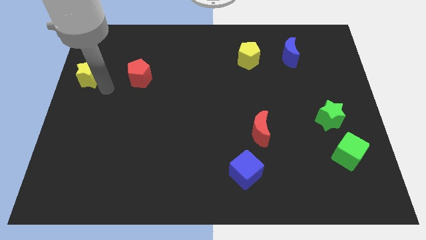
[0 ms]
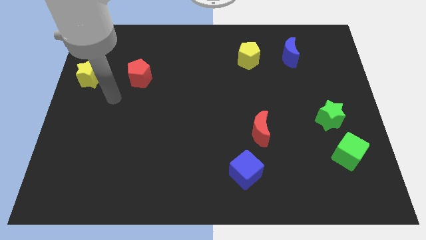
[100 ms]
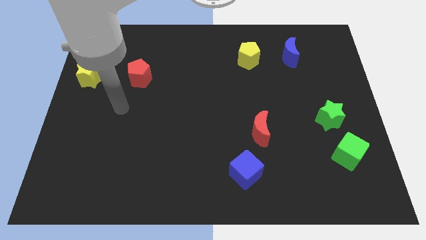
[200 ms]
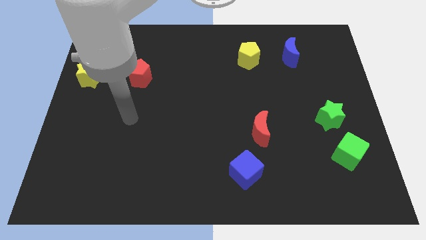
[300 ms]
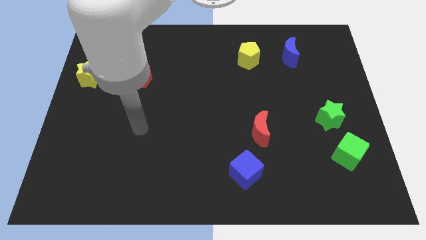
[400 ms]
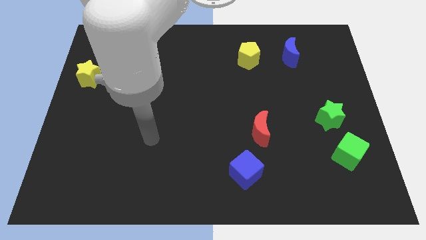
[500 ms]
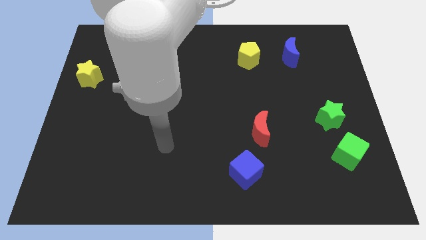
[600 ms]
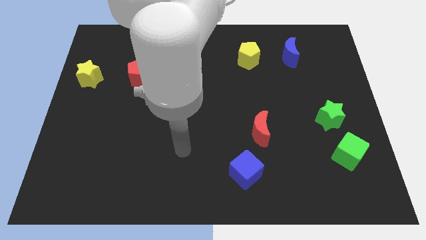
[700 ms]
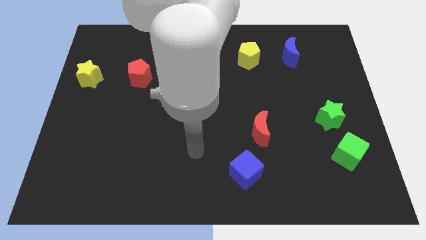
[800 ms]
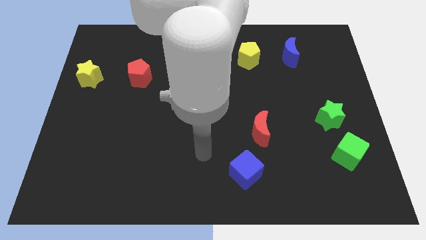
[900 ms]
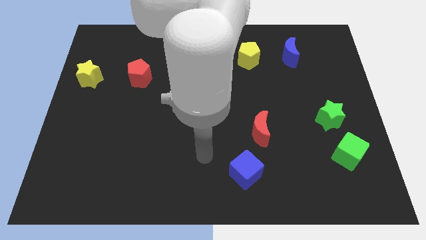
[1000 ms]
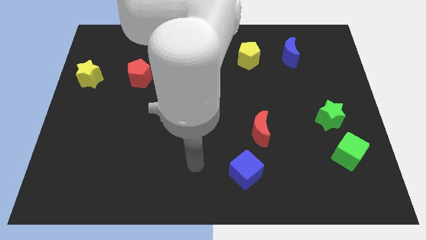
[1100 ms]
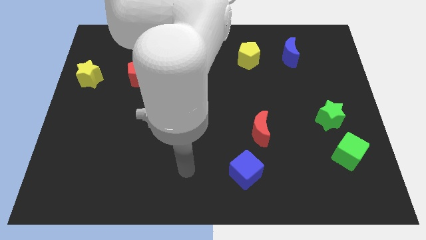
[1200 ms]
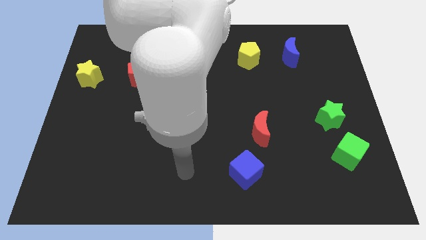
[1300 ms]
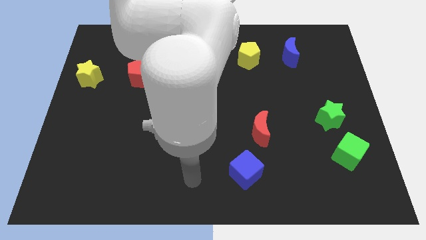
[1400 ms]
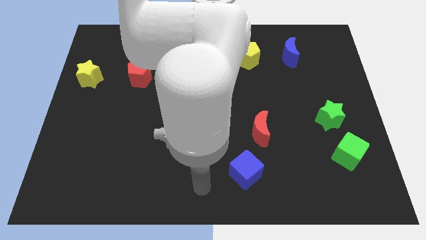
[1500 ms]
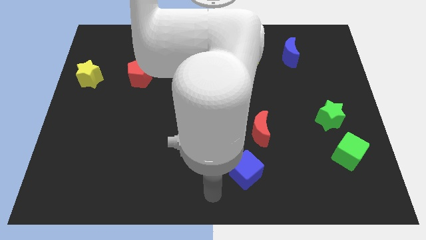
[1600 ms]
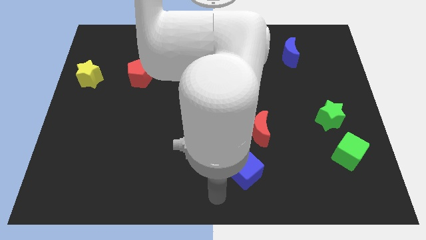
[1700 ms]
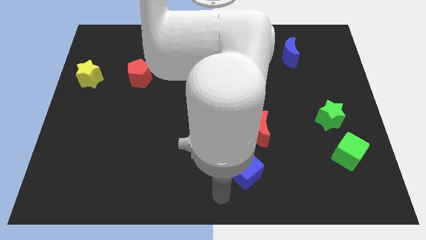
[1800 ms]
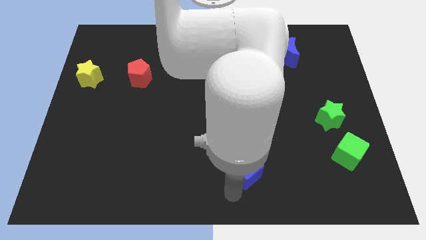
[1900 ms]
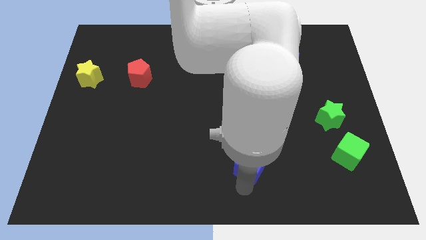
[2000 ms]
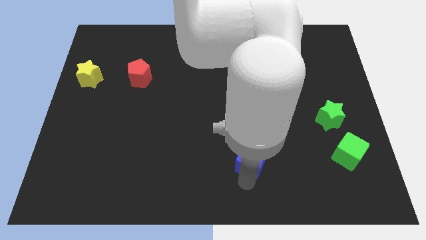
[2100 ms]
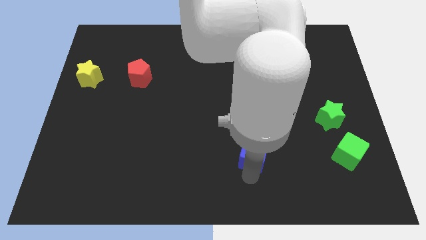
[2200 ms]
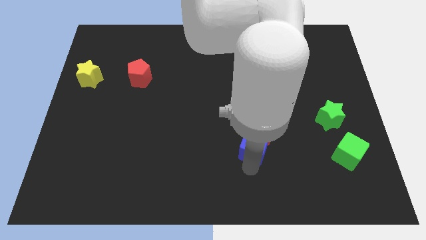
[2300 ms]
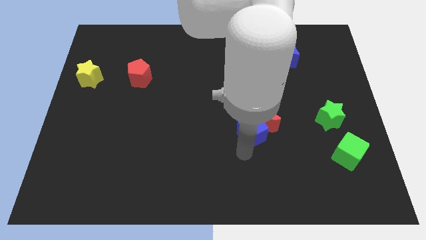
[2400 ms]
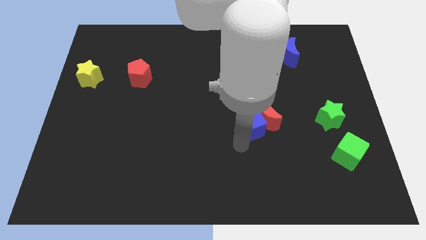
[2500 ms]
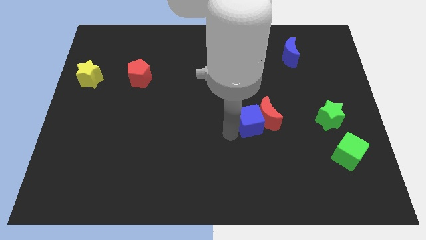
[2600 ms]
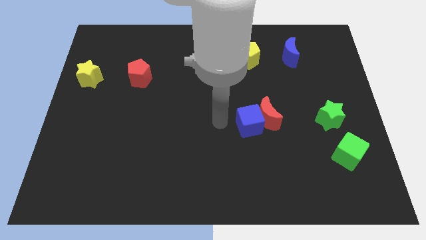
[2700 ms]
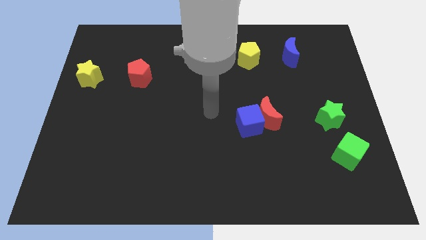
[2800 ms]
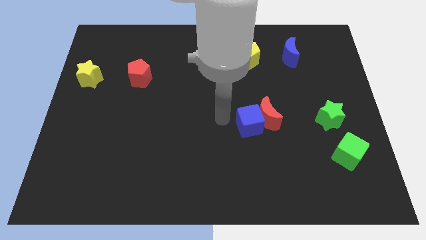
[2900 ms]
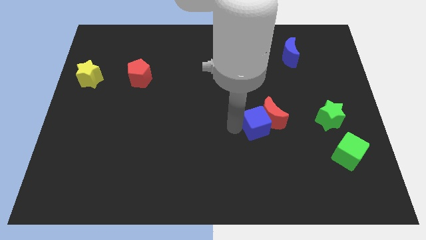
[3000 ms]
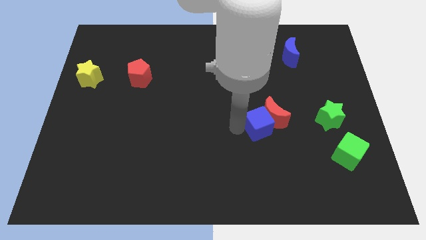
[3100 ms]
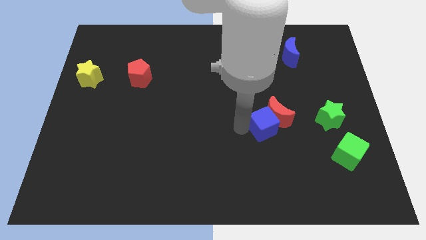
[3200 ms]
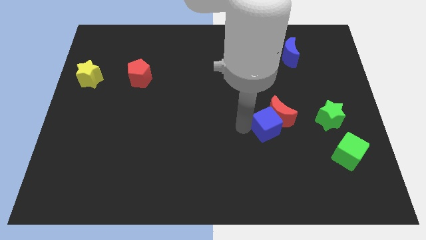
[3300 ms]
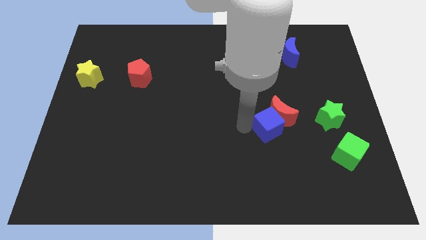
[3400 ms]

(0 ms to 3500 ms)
push blue cube and red crescent towards the right side of the board

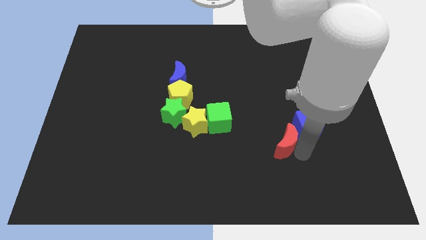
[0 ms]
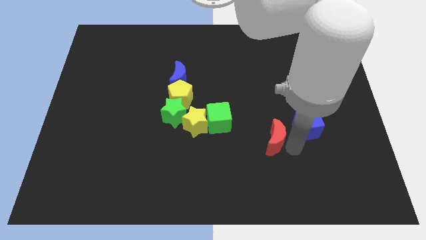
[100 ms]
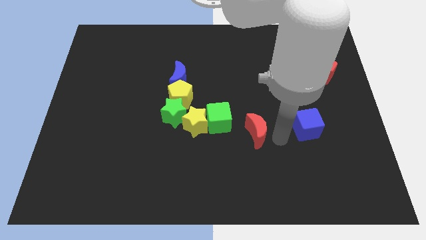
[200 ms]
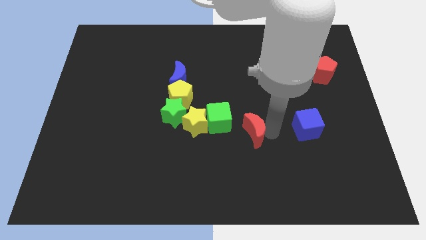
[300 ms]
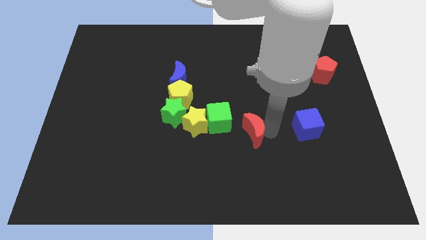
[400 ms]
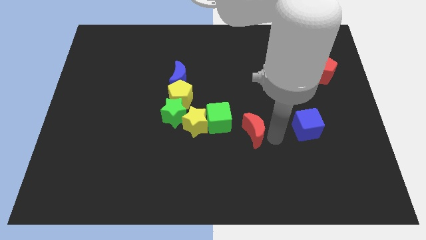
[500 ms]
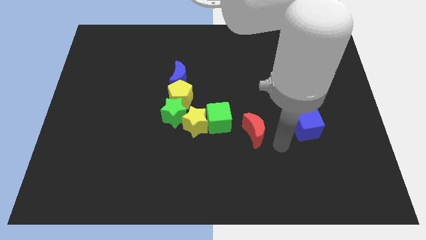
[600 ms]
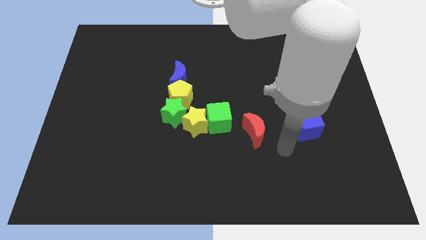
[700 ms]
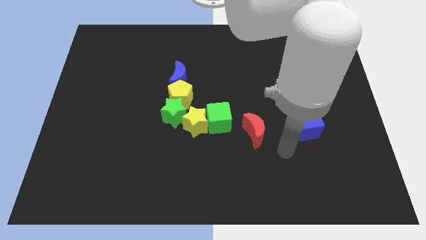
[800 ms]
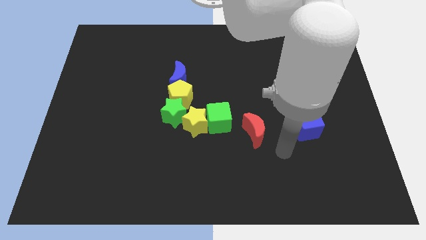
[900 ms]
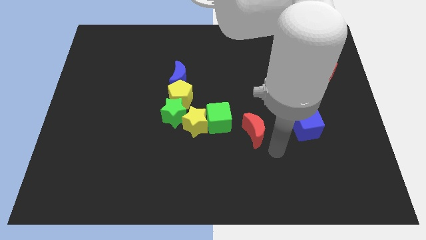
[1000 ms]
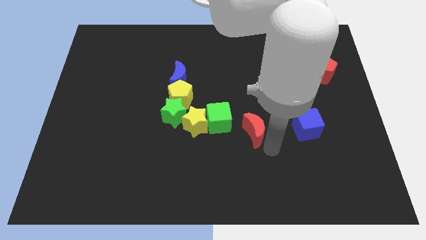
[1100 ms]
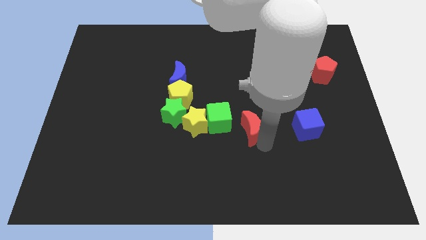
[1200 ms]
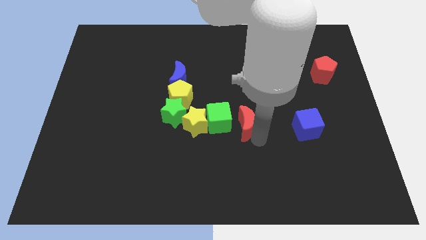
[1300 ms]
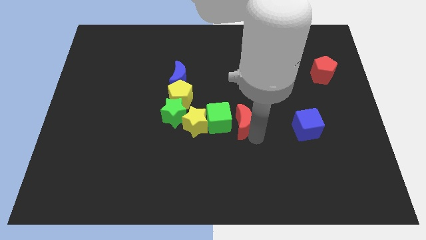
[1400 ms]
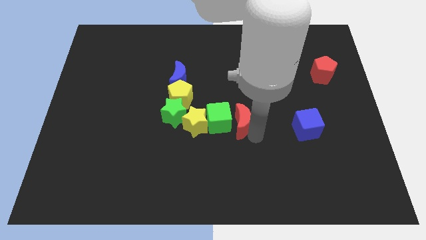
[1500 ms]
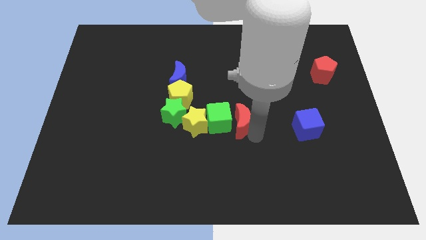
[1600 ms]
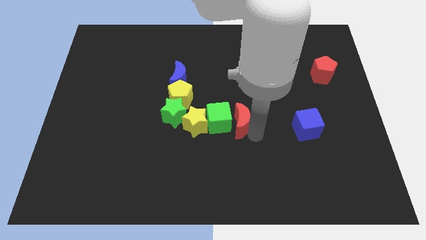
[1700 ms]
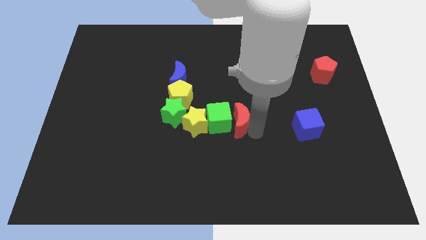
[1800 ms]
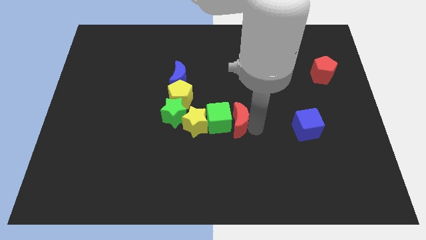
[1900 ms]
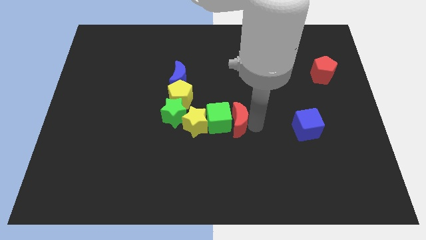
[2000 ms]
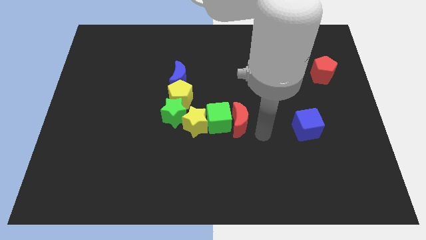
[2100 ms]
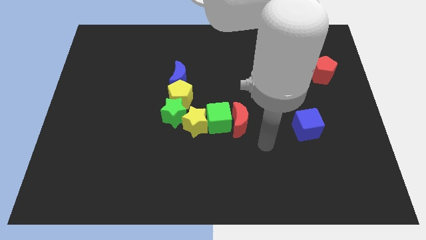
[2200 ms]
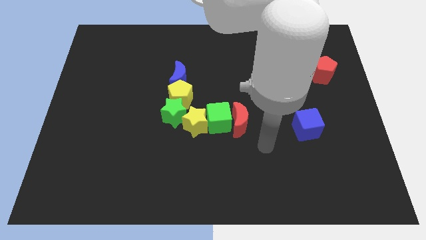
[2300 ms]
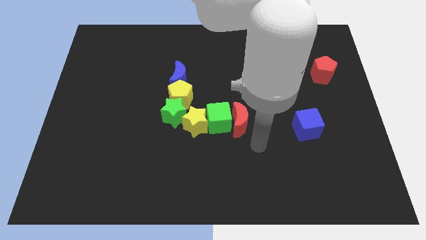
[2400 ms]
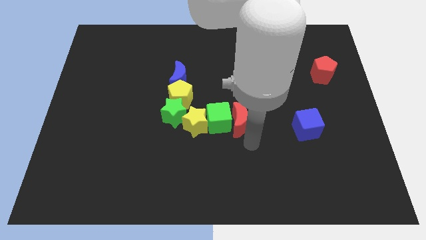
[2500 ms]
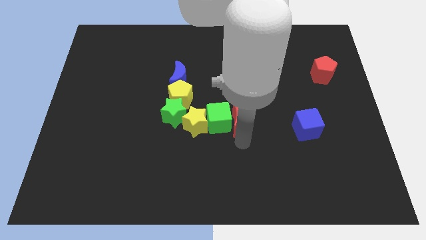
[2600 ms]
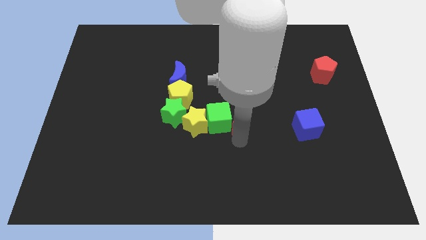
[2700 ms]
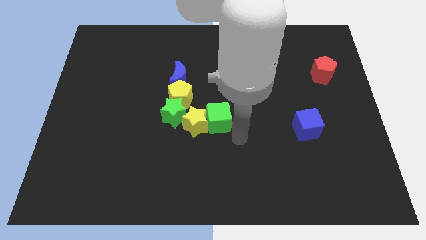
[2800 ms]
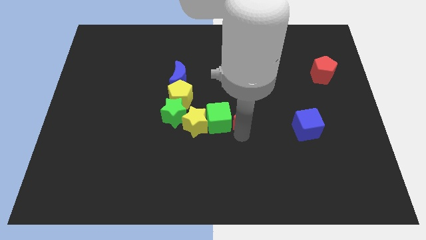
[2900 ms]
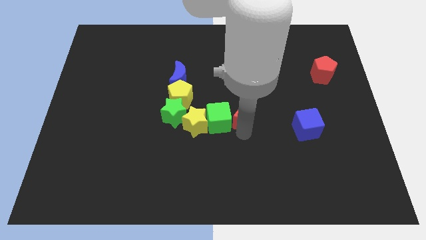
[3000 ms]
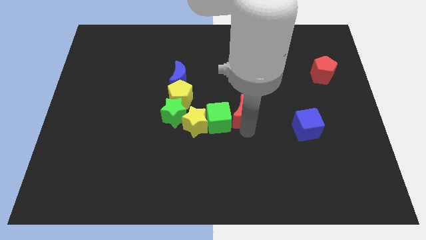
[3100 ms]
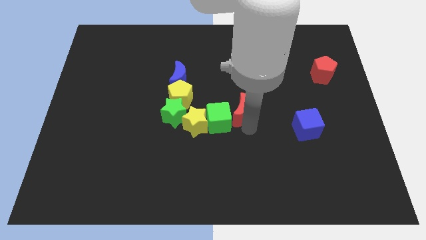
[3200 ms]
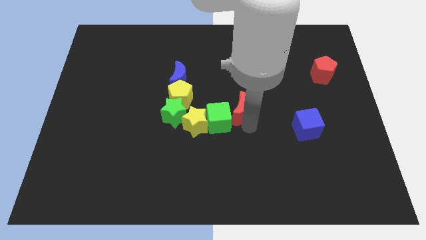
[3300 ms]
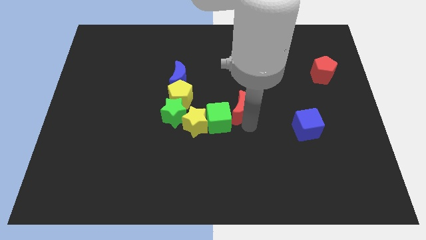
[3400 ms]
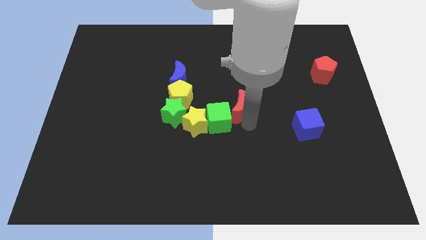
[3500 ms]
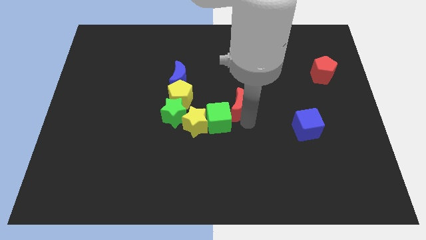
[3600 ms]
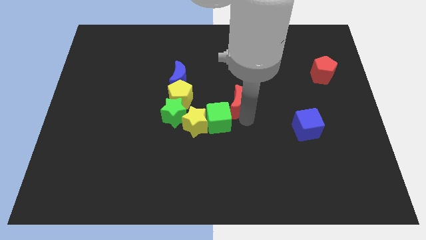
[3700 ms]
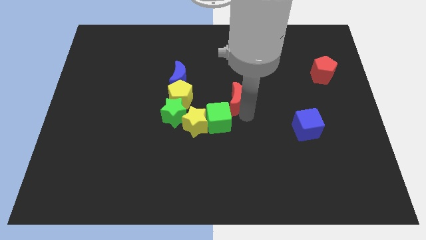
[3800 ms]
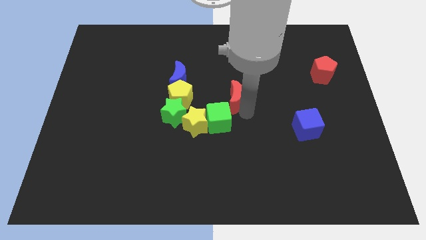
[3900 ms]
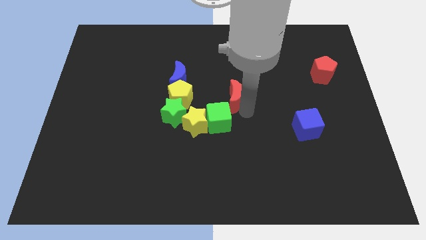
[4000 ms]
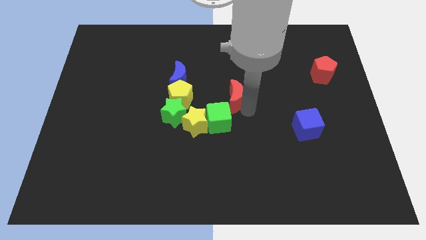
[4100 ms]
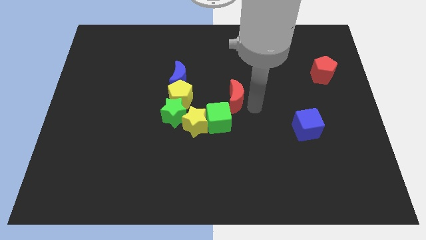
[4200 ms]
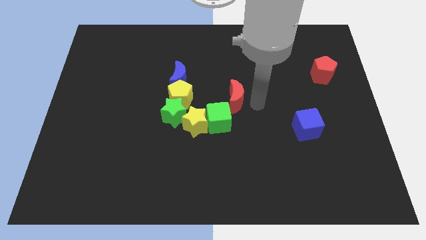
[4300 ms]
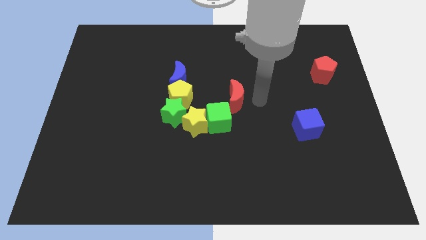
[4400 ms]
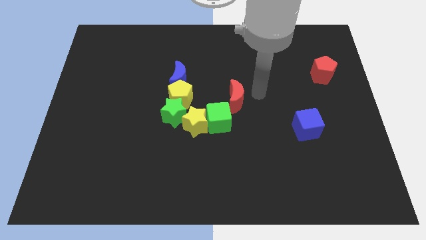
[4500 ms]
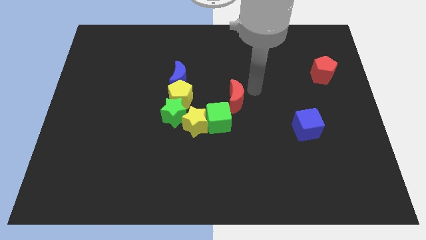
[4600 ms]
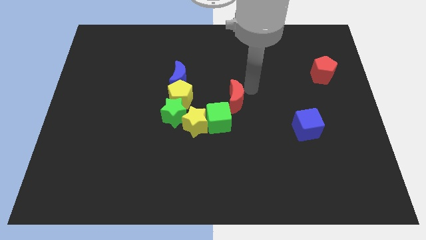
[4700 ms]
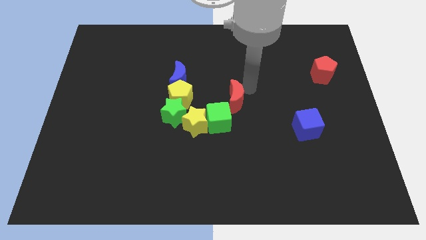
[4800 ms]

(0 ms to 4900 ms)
move the red moon diagonally to the right of the green cube

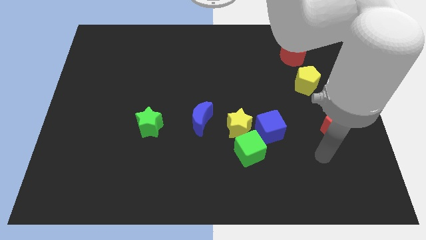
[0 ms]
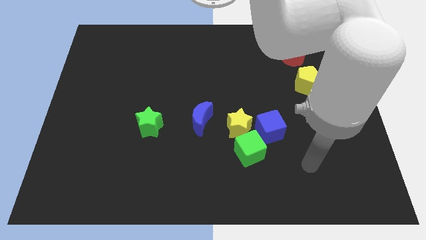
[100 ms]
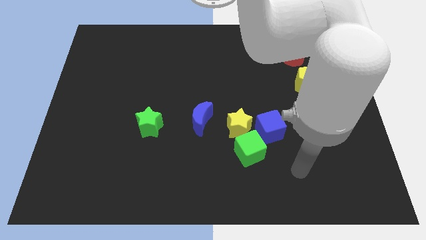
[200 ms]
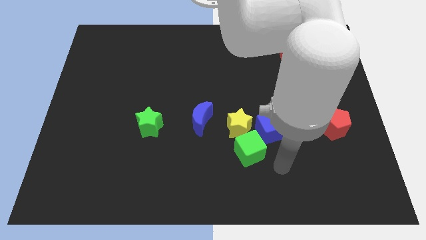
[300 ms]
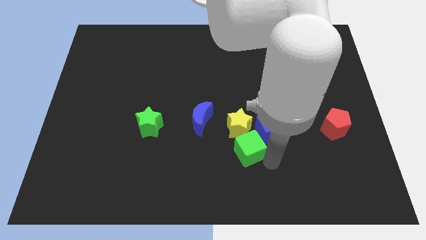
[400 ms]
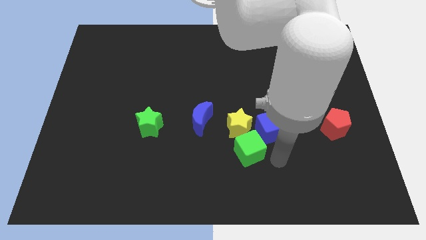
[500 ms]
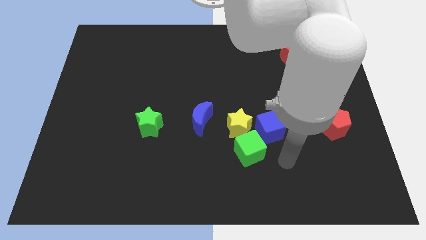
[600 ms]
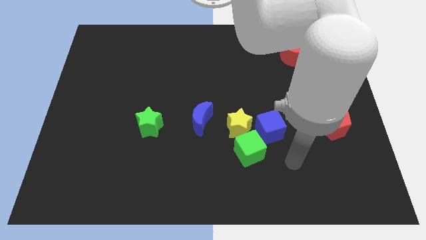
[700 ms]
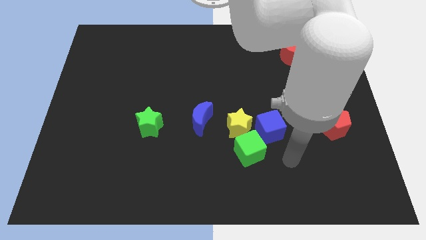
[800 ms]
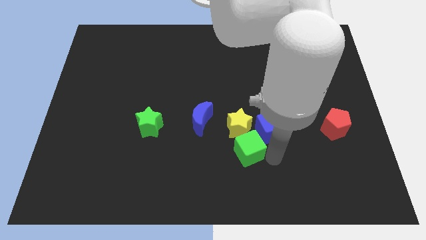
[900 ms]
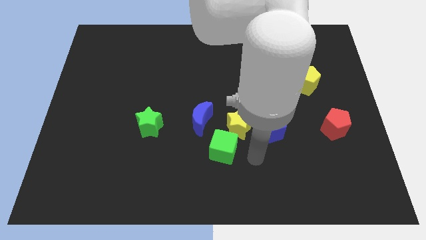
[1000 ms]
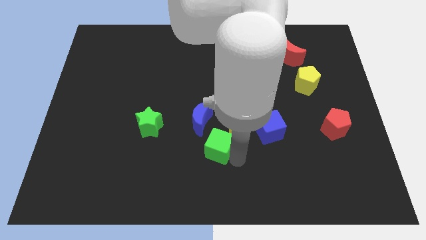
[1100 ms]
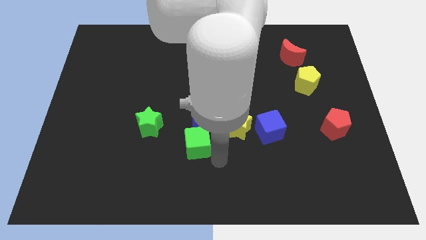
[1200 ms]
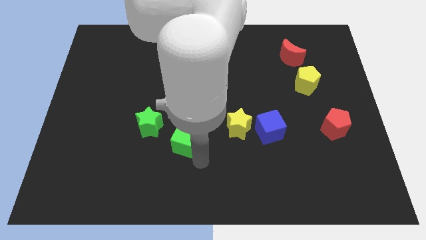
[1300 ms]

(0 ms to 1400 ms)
move the green cube to the bottom of the blue crescent
